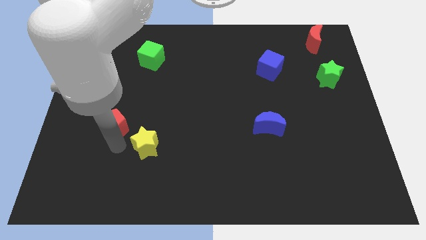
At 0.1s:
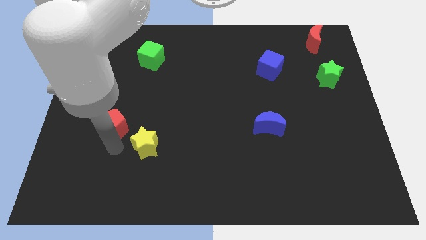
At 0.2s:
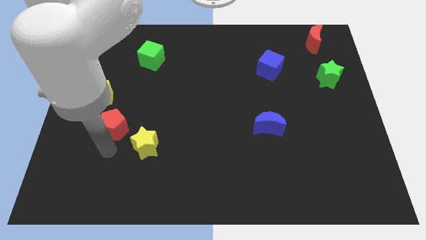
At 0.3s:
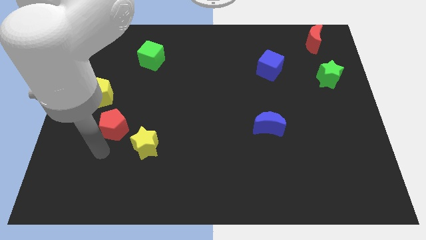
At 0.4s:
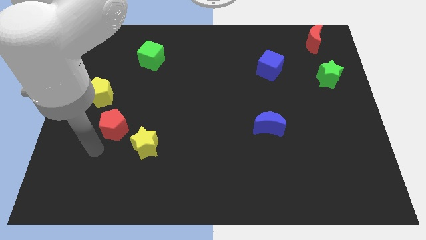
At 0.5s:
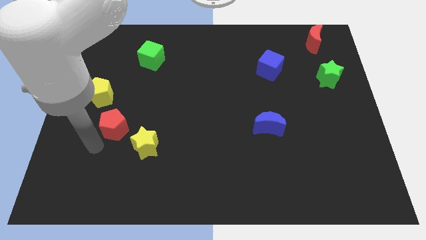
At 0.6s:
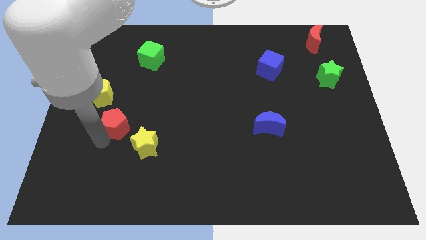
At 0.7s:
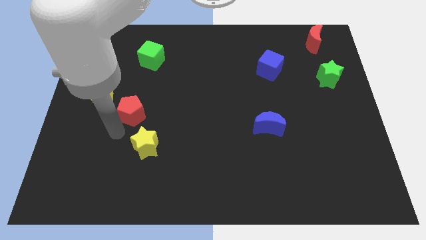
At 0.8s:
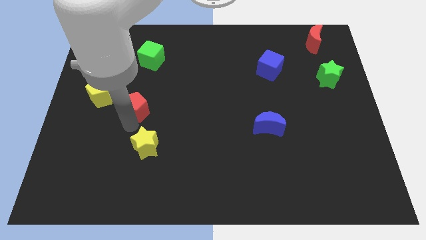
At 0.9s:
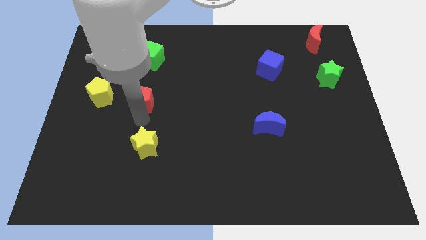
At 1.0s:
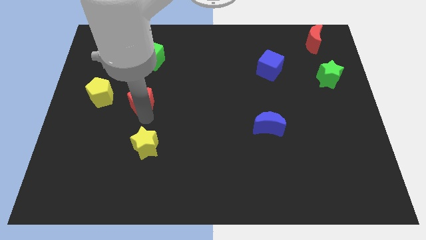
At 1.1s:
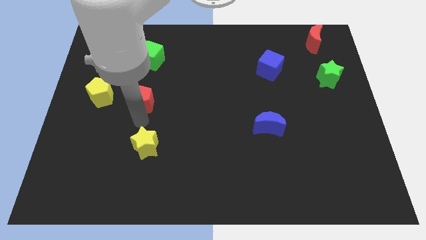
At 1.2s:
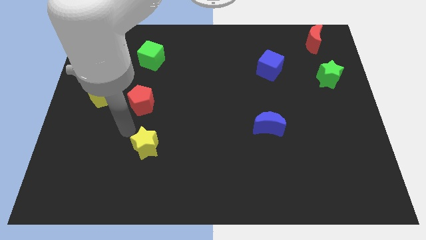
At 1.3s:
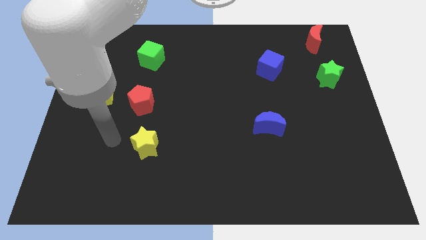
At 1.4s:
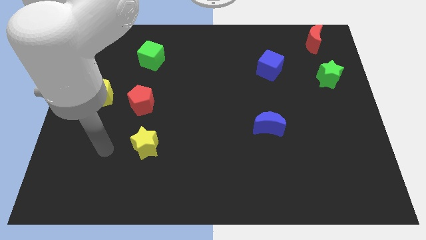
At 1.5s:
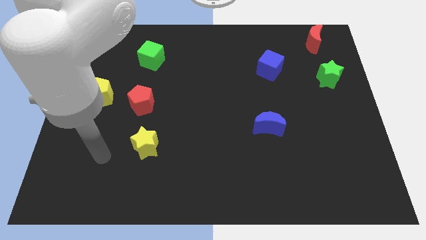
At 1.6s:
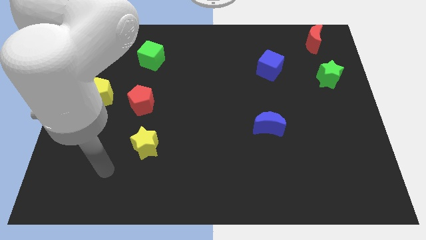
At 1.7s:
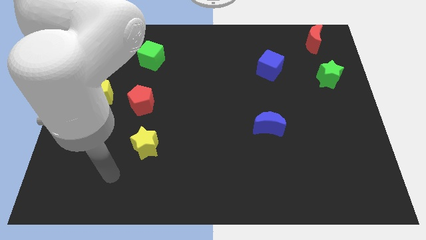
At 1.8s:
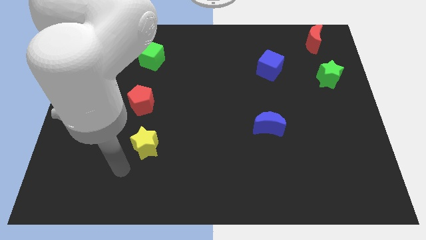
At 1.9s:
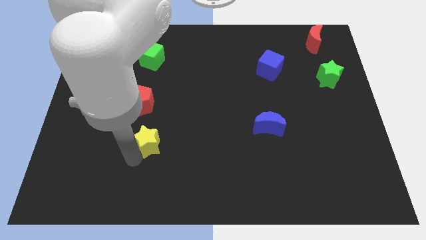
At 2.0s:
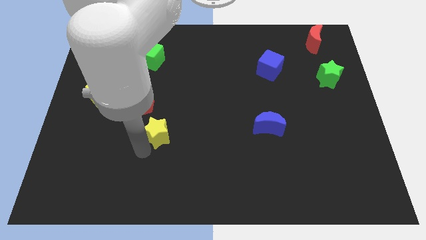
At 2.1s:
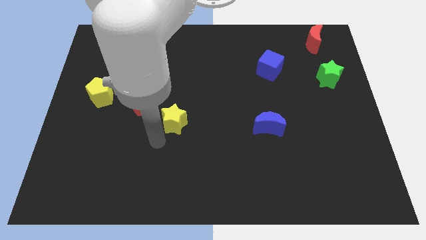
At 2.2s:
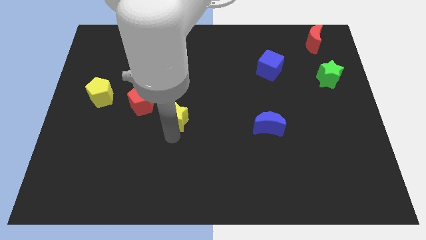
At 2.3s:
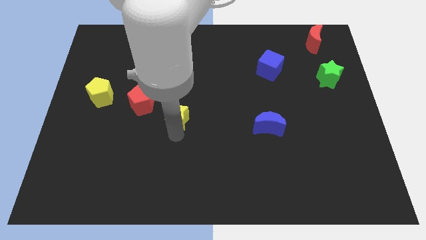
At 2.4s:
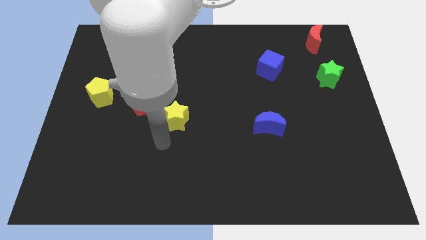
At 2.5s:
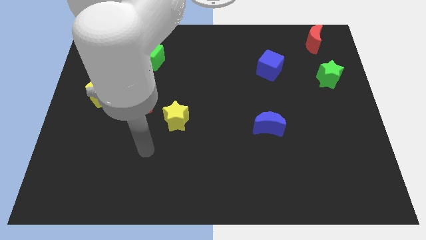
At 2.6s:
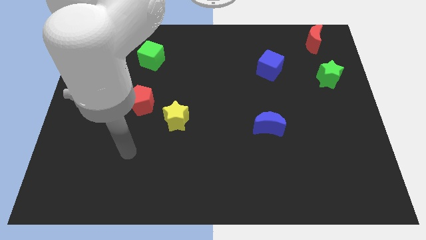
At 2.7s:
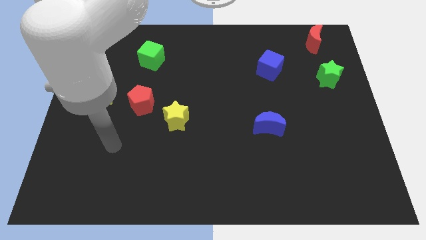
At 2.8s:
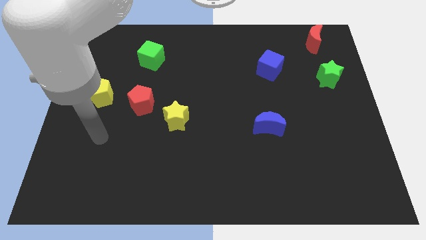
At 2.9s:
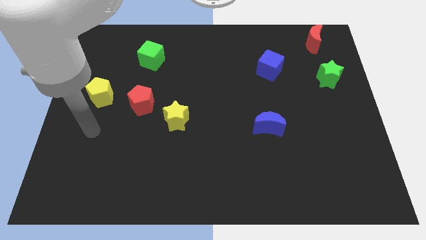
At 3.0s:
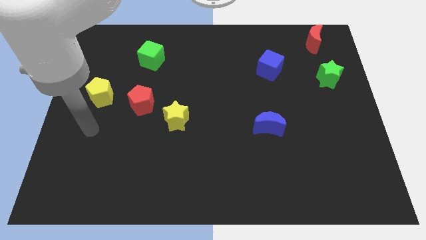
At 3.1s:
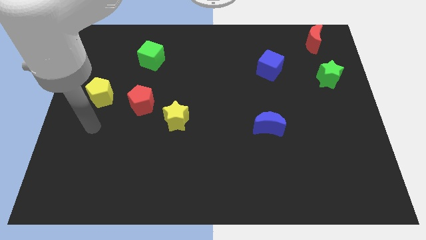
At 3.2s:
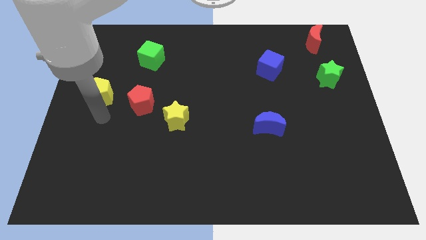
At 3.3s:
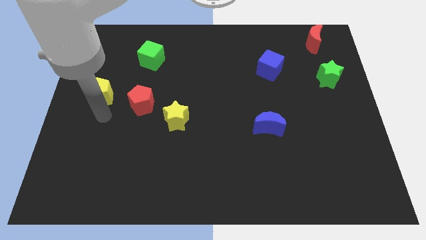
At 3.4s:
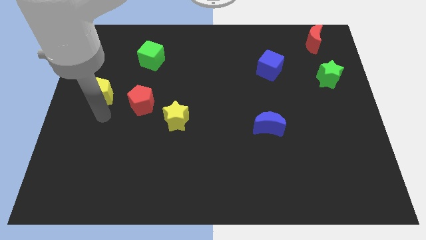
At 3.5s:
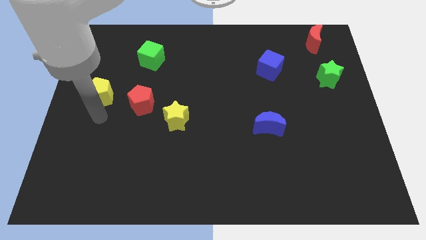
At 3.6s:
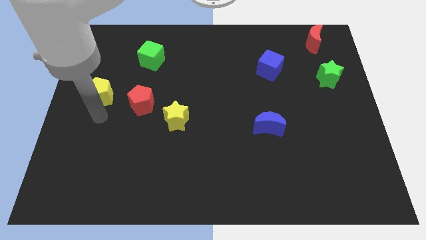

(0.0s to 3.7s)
move the yellow star to the center side

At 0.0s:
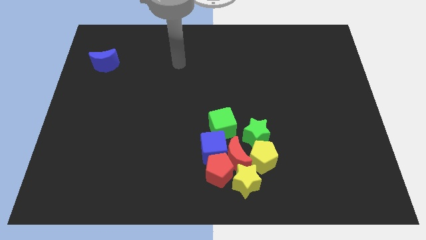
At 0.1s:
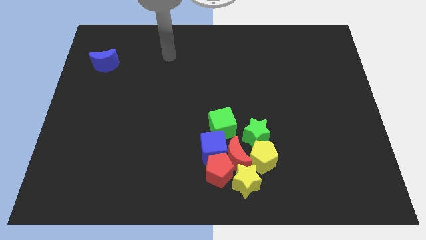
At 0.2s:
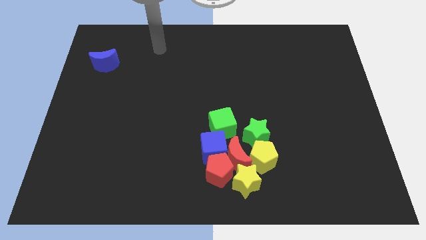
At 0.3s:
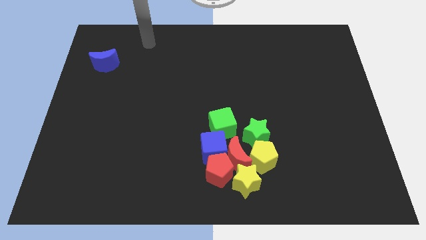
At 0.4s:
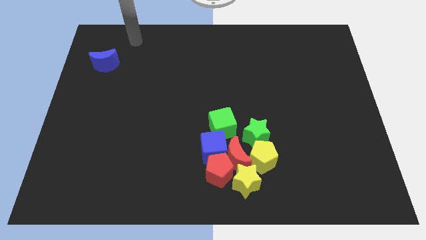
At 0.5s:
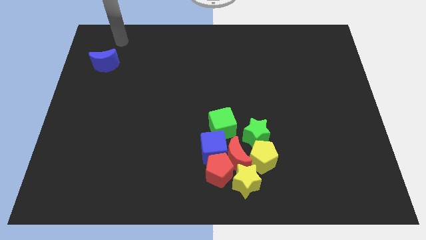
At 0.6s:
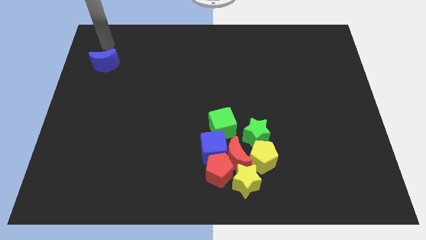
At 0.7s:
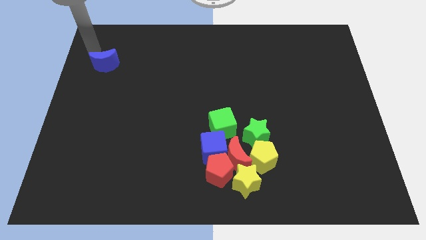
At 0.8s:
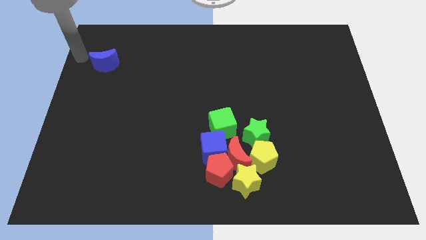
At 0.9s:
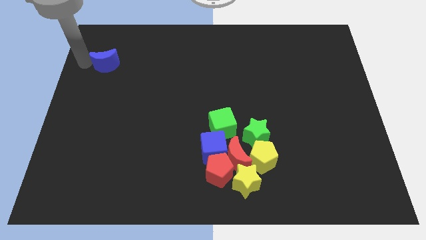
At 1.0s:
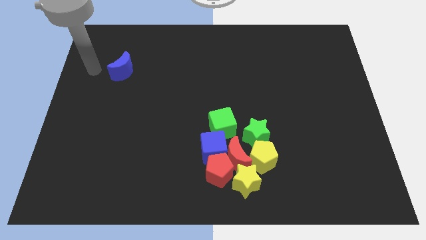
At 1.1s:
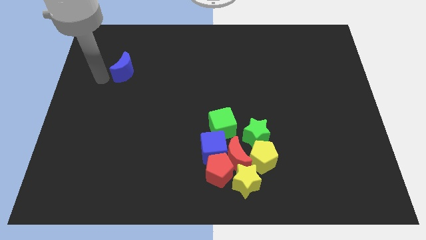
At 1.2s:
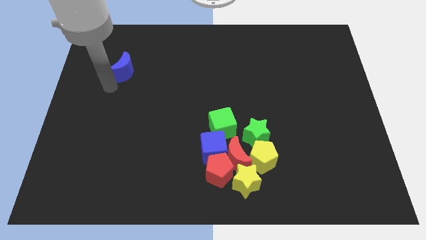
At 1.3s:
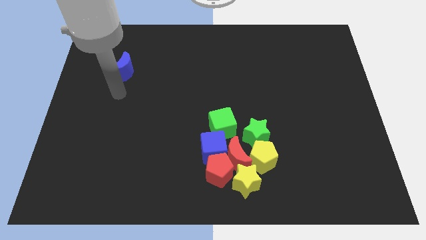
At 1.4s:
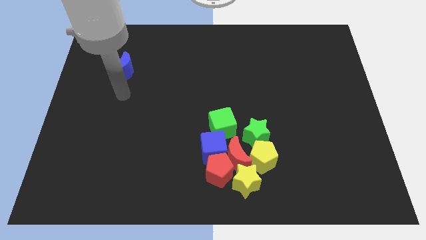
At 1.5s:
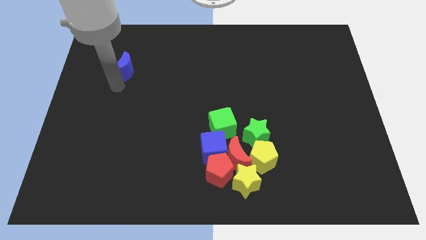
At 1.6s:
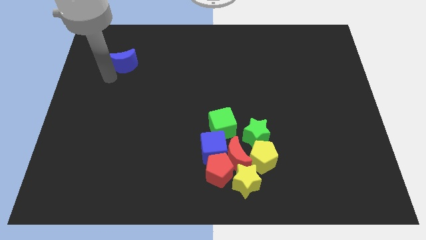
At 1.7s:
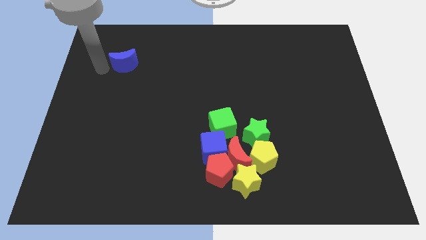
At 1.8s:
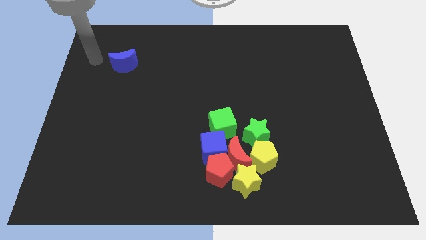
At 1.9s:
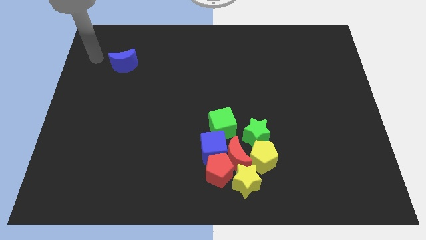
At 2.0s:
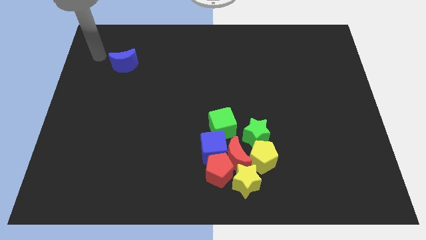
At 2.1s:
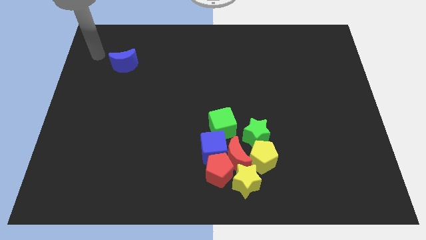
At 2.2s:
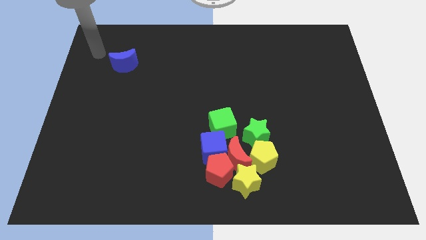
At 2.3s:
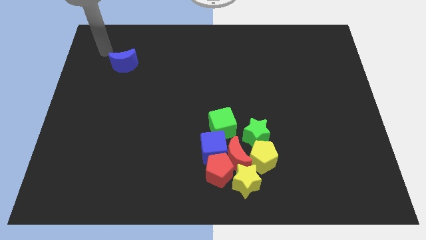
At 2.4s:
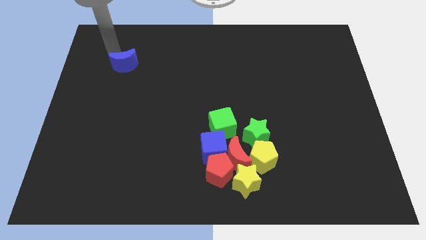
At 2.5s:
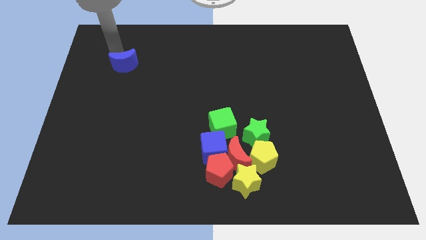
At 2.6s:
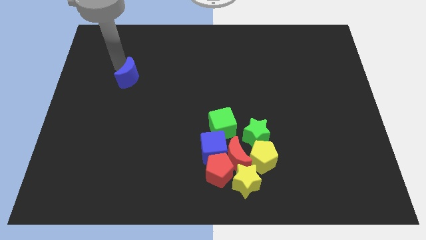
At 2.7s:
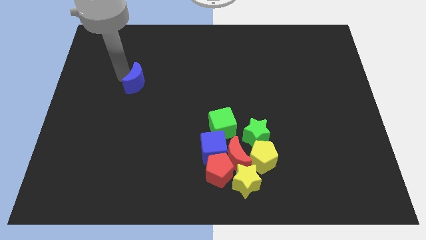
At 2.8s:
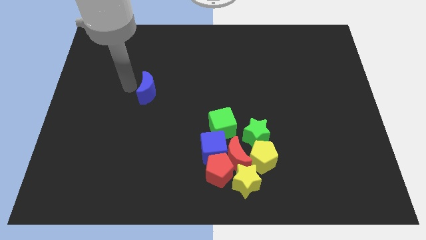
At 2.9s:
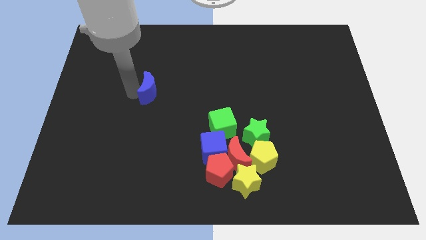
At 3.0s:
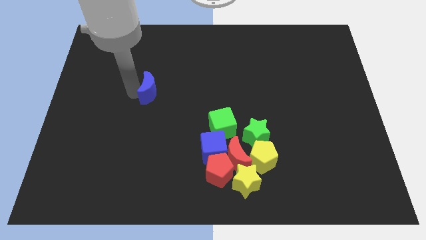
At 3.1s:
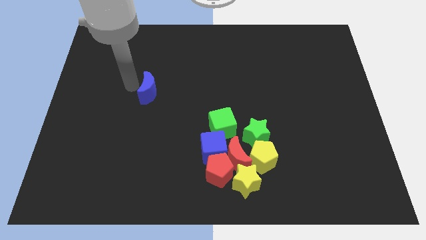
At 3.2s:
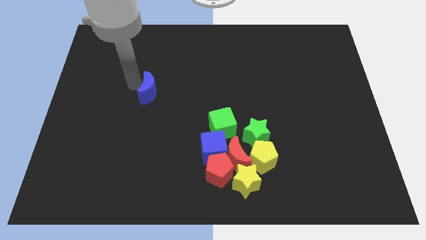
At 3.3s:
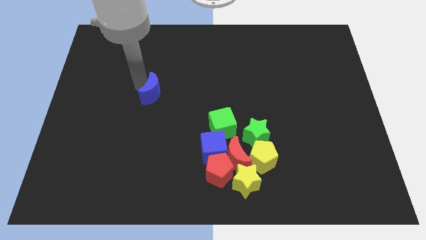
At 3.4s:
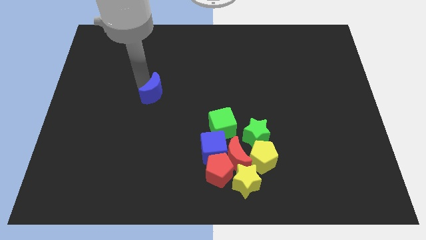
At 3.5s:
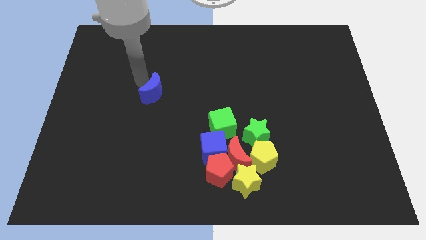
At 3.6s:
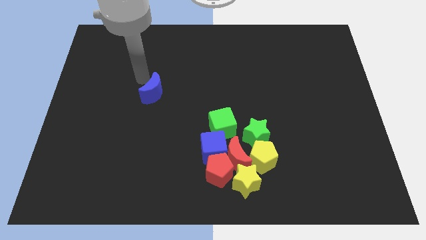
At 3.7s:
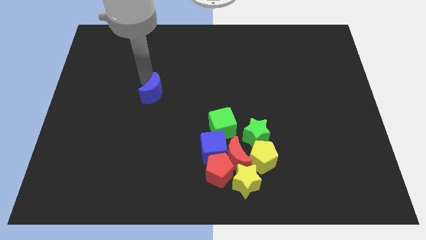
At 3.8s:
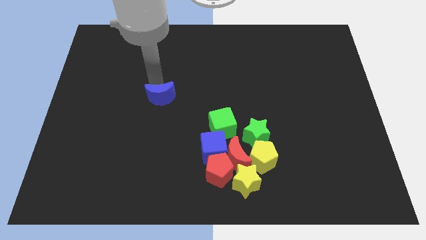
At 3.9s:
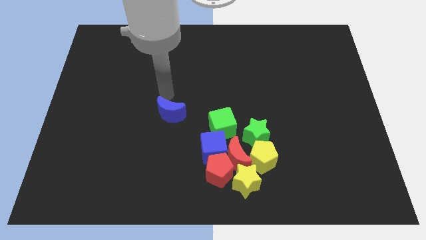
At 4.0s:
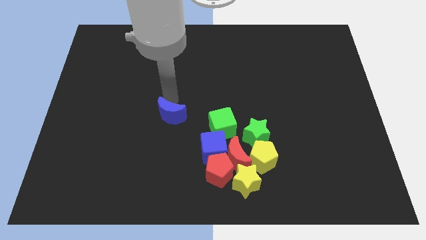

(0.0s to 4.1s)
push the blue crescent to the bottom of the board

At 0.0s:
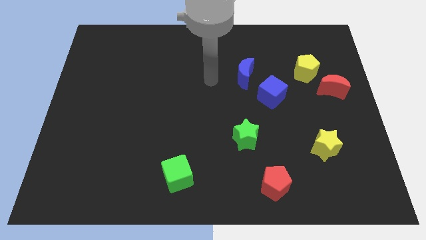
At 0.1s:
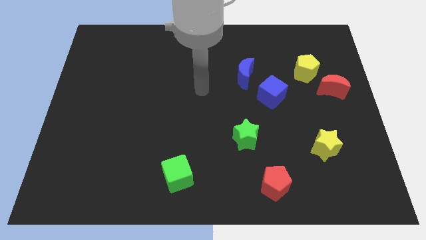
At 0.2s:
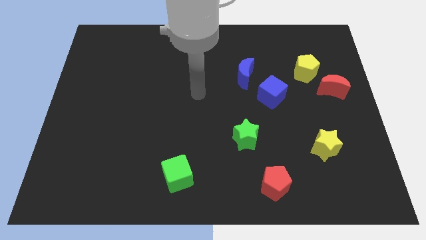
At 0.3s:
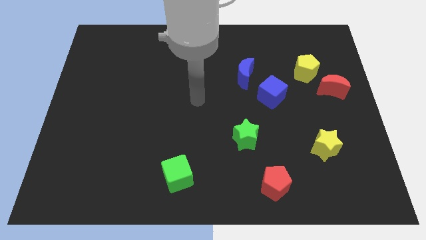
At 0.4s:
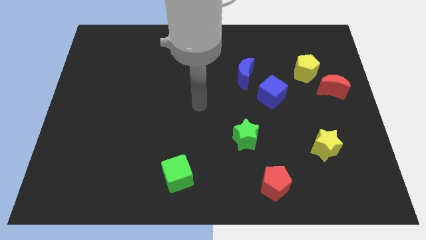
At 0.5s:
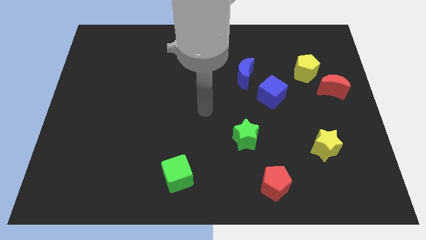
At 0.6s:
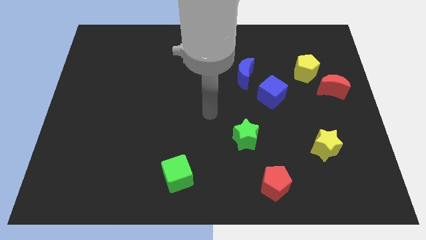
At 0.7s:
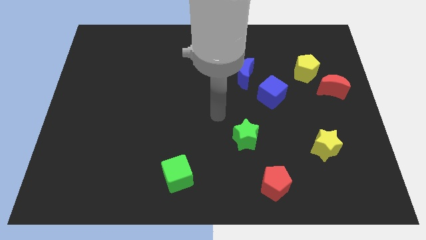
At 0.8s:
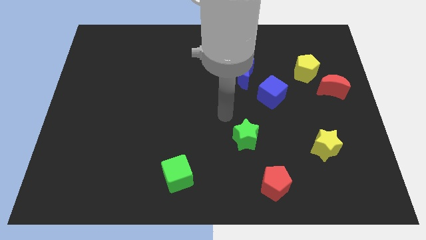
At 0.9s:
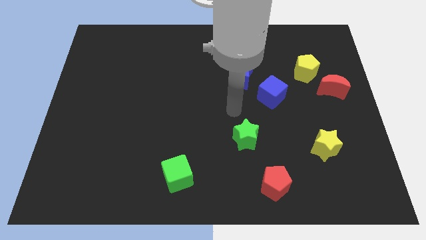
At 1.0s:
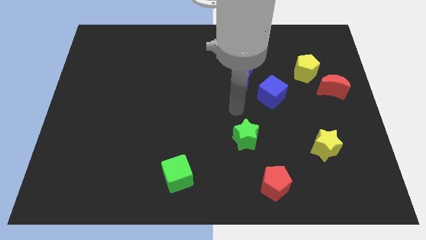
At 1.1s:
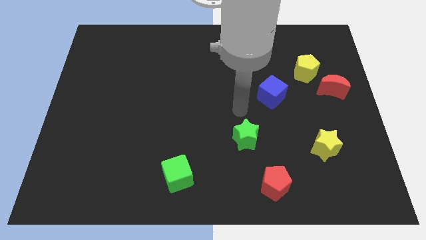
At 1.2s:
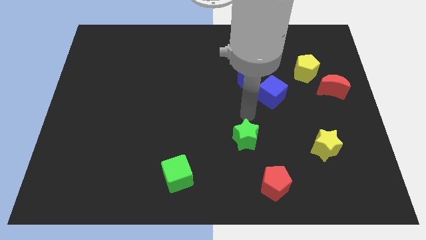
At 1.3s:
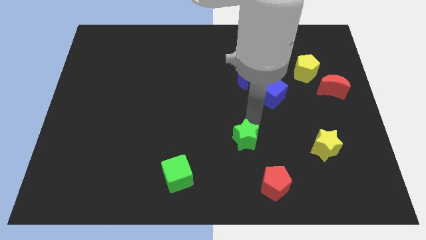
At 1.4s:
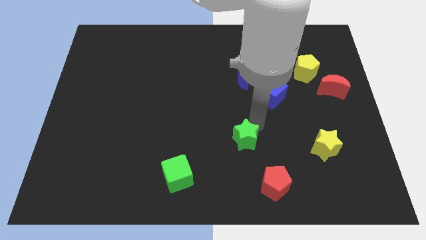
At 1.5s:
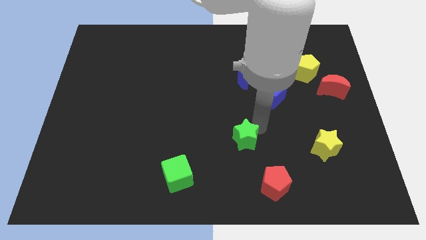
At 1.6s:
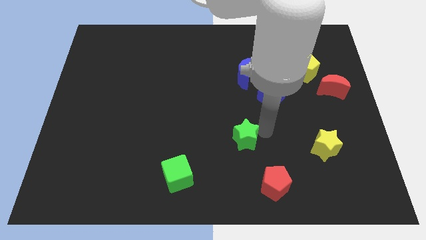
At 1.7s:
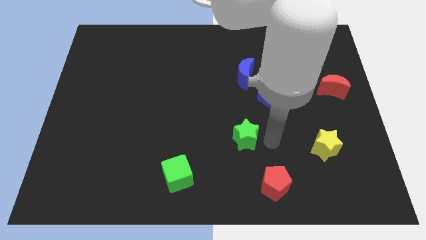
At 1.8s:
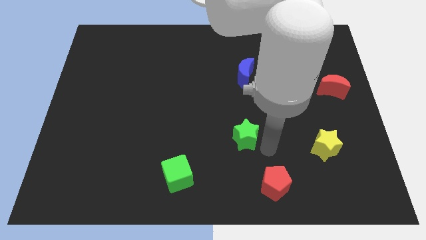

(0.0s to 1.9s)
place your arm to the right of the green star
